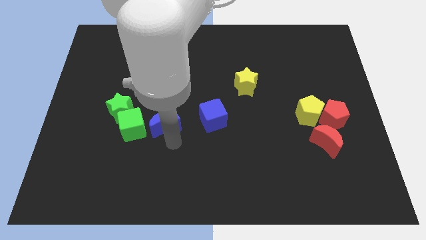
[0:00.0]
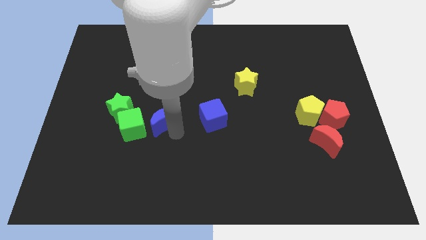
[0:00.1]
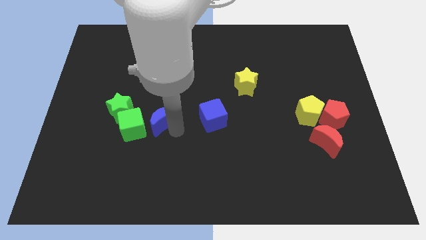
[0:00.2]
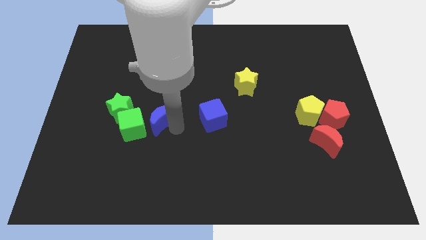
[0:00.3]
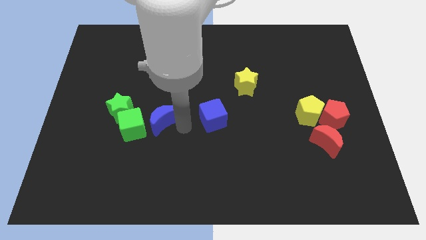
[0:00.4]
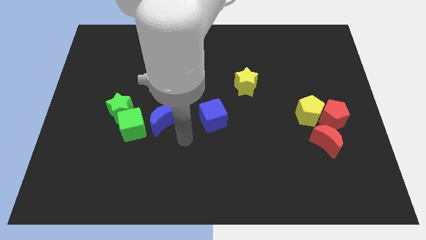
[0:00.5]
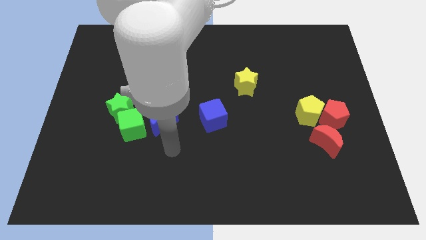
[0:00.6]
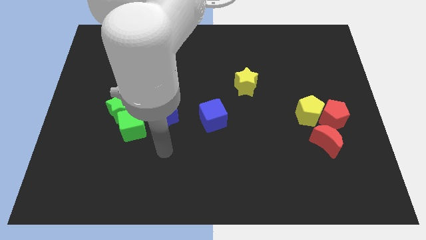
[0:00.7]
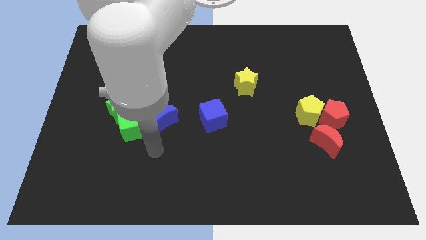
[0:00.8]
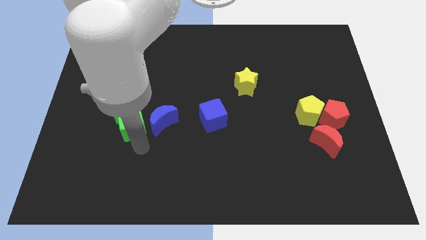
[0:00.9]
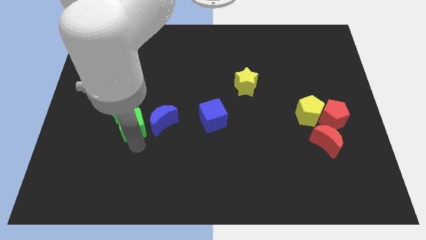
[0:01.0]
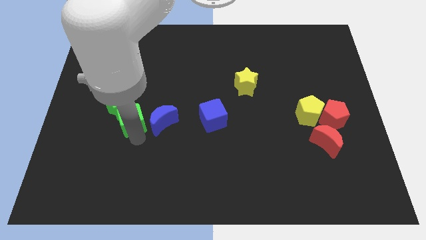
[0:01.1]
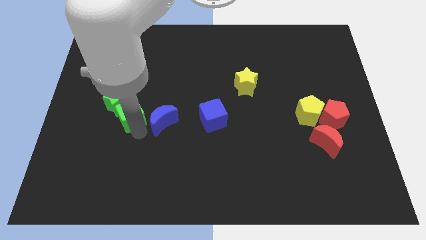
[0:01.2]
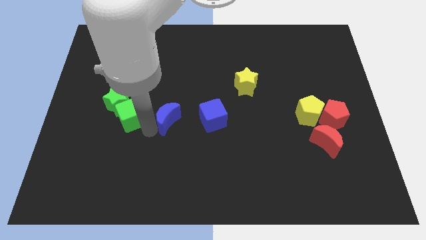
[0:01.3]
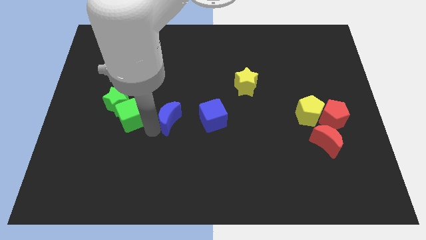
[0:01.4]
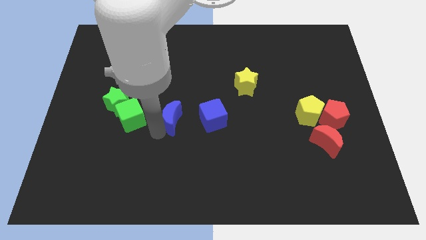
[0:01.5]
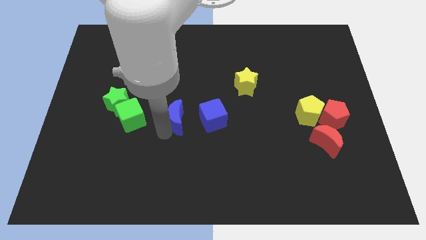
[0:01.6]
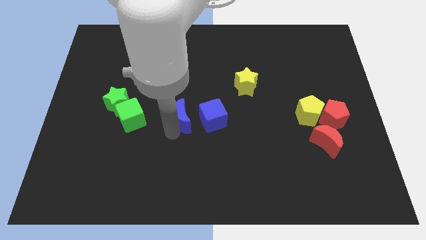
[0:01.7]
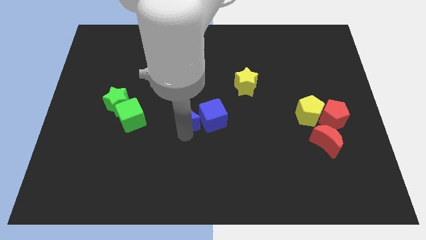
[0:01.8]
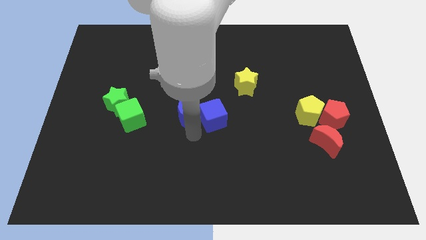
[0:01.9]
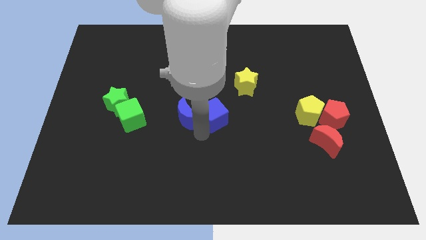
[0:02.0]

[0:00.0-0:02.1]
move the blue moon on the left side of the blue cube

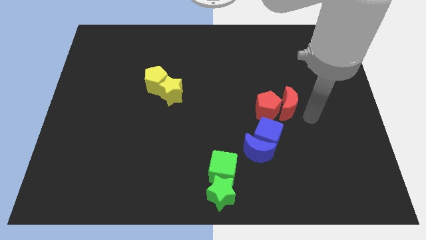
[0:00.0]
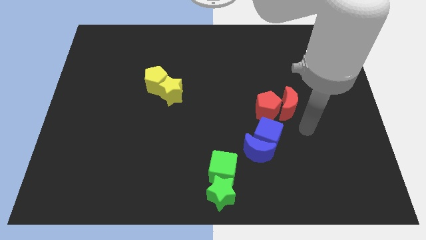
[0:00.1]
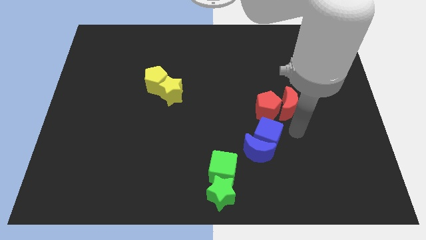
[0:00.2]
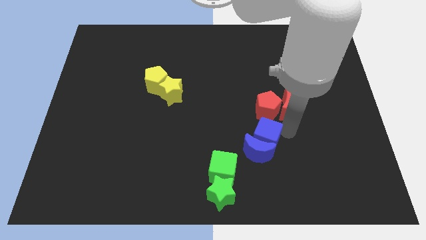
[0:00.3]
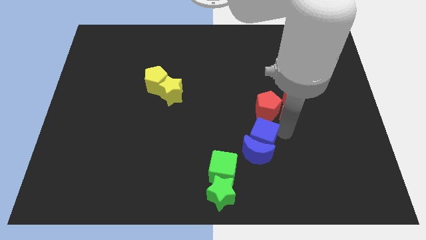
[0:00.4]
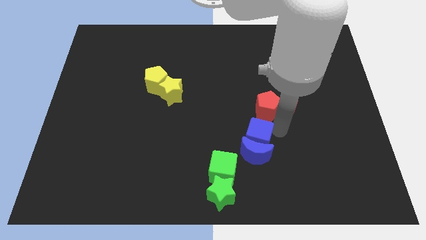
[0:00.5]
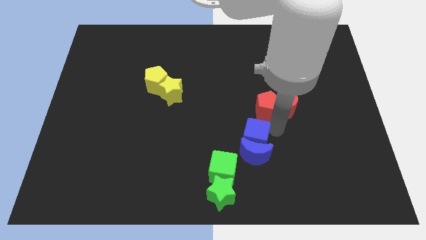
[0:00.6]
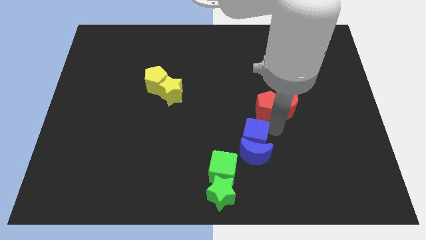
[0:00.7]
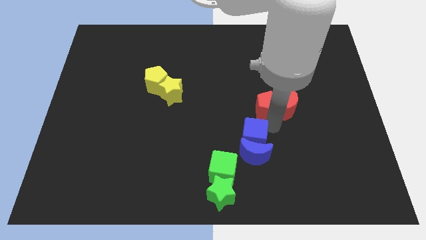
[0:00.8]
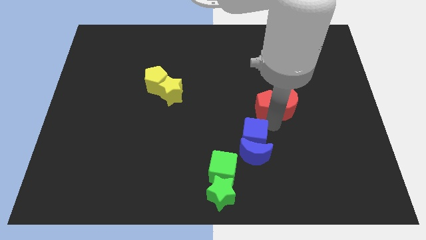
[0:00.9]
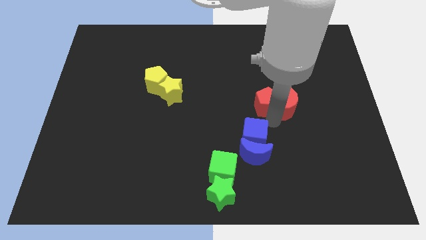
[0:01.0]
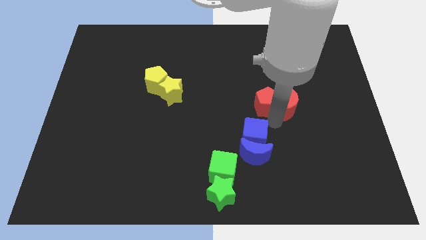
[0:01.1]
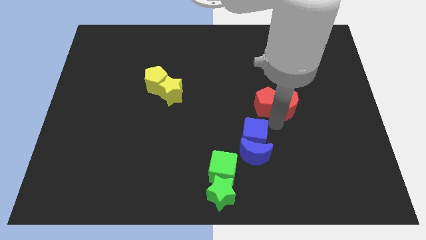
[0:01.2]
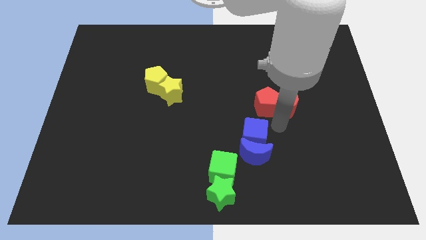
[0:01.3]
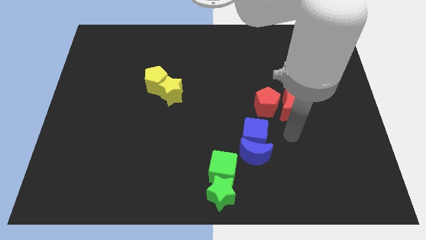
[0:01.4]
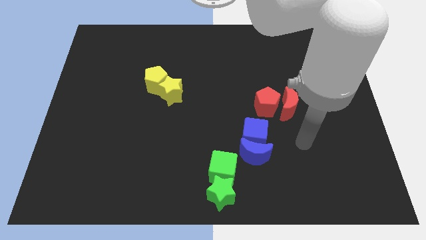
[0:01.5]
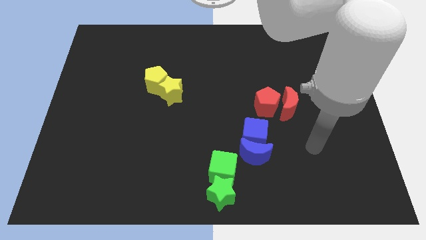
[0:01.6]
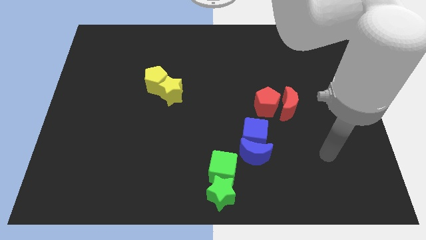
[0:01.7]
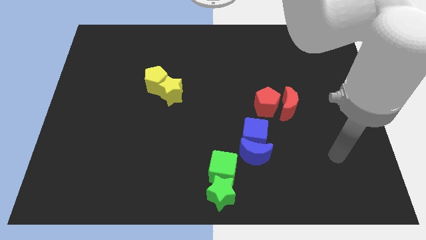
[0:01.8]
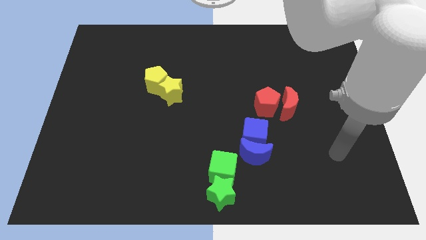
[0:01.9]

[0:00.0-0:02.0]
adjust the blue cube to the top side of the blue crescent

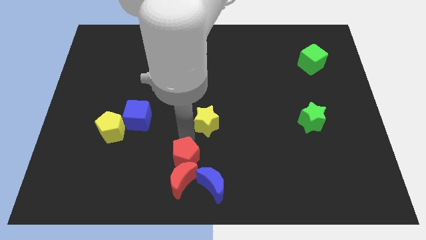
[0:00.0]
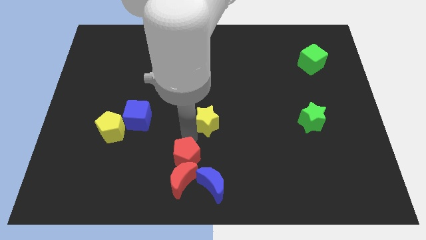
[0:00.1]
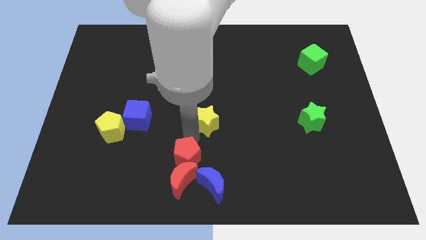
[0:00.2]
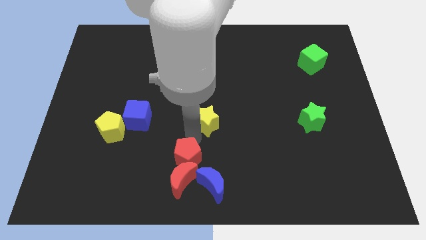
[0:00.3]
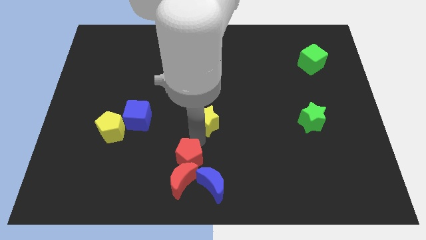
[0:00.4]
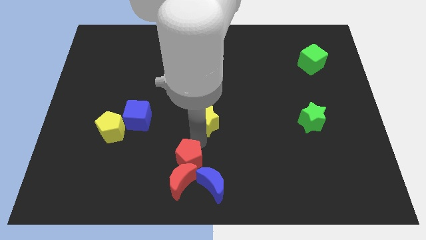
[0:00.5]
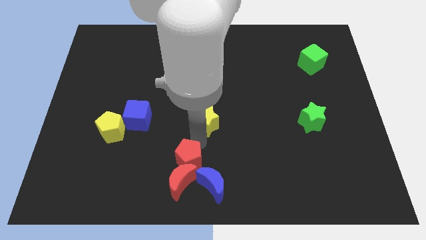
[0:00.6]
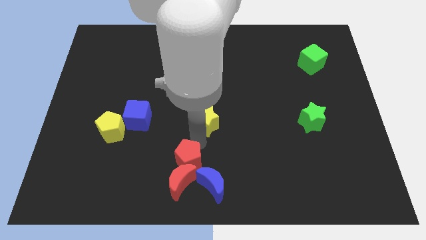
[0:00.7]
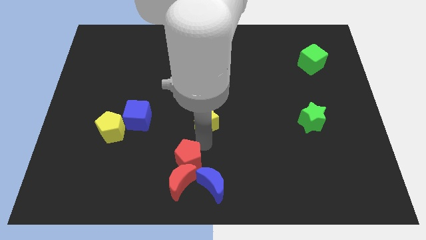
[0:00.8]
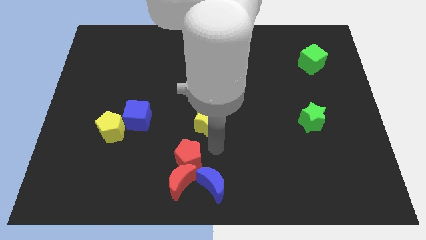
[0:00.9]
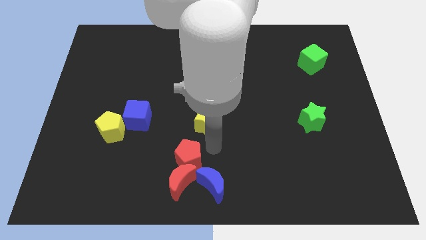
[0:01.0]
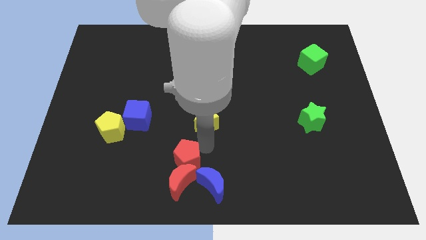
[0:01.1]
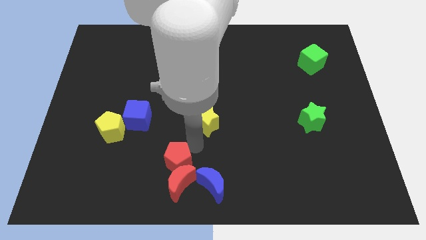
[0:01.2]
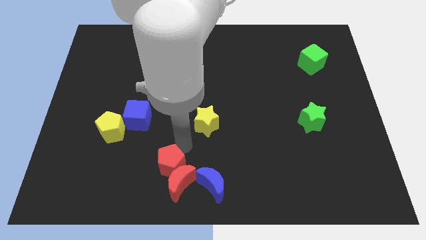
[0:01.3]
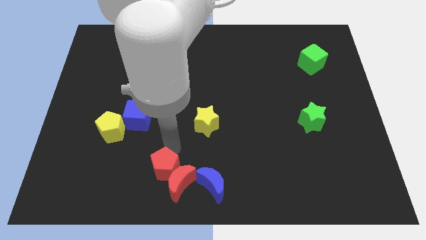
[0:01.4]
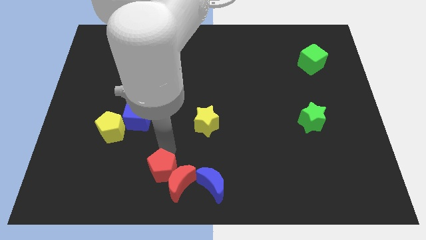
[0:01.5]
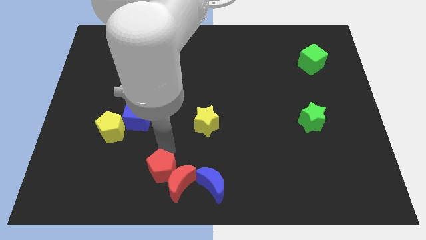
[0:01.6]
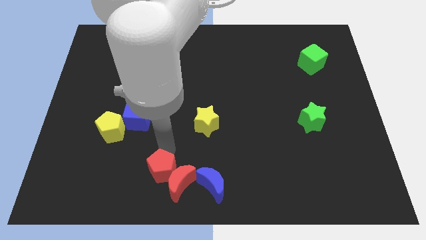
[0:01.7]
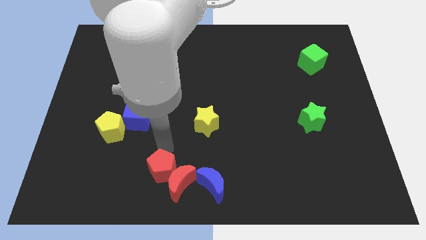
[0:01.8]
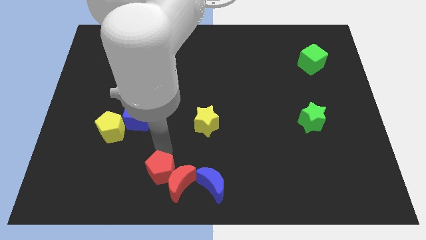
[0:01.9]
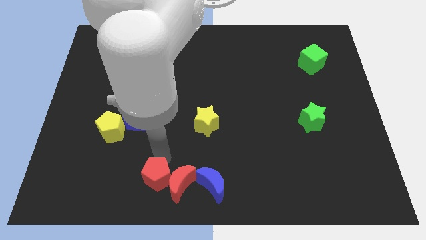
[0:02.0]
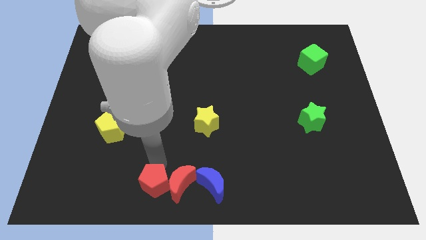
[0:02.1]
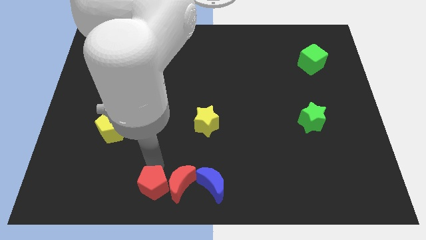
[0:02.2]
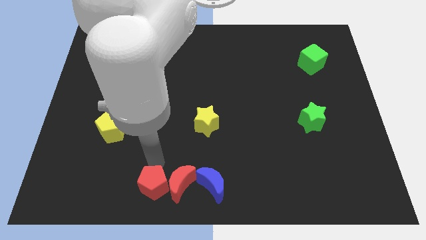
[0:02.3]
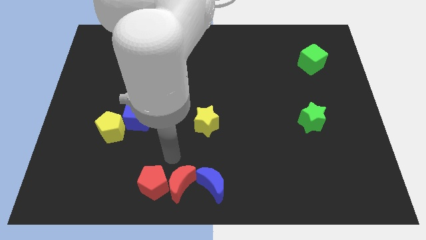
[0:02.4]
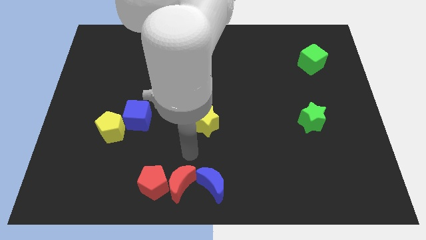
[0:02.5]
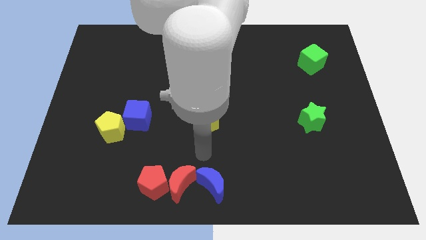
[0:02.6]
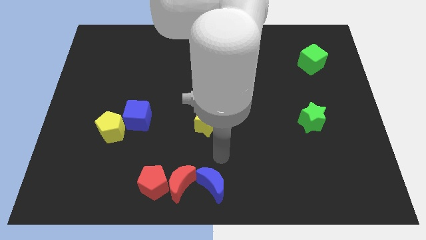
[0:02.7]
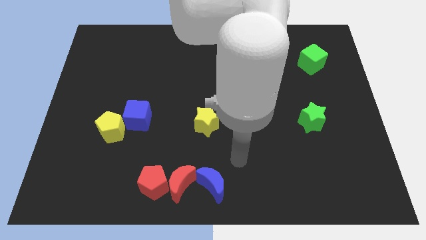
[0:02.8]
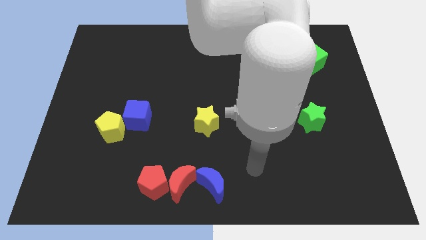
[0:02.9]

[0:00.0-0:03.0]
place the red pentagon left to the red crescent to form a horizontal line

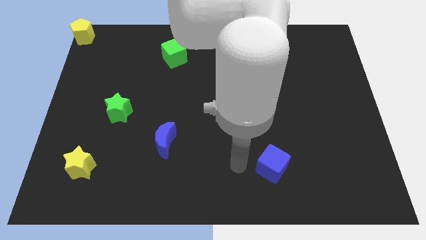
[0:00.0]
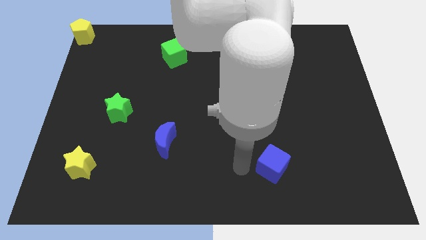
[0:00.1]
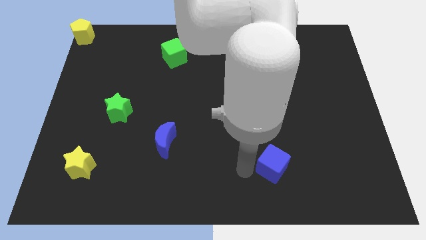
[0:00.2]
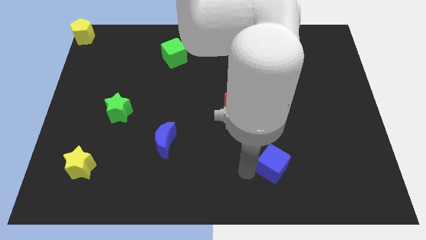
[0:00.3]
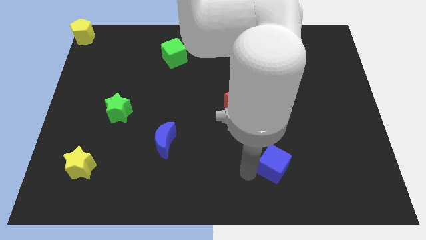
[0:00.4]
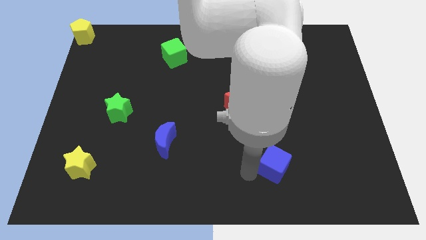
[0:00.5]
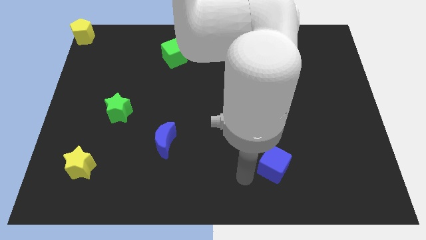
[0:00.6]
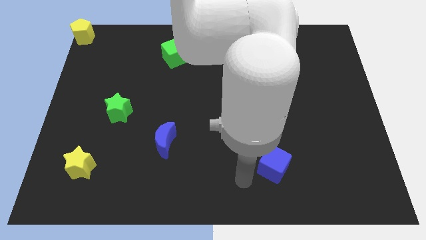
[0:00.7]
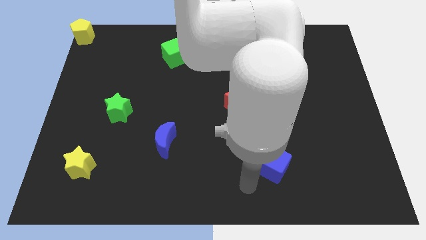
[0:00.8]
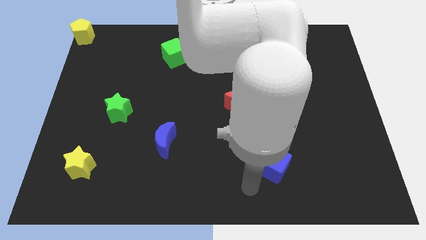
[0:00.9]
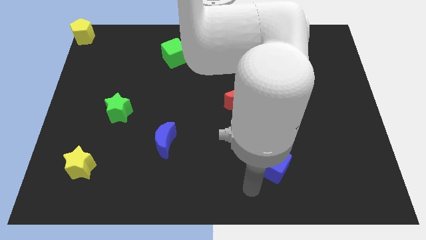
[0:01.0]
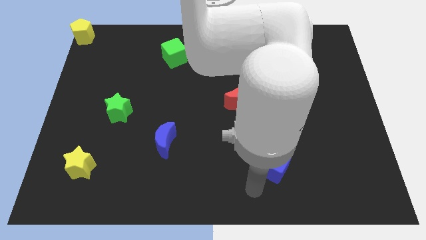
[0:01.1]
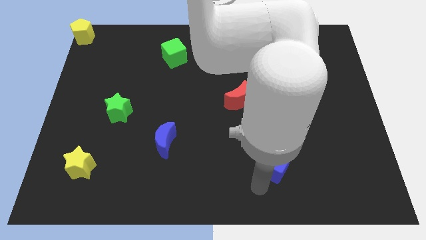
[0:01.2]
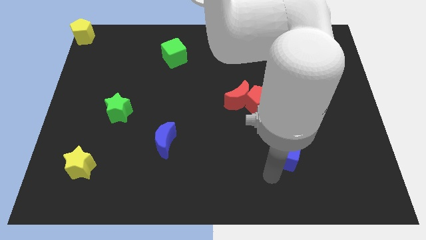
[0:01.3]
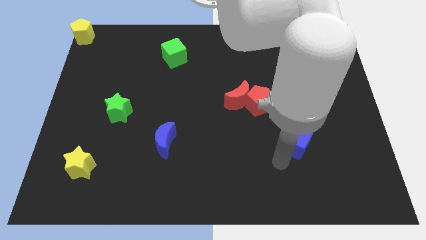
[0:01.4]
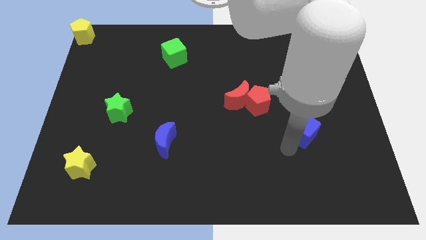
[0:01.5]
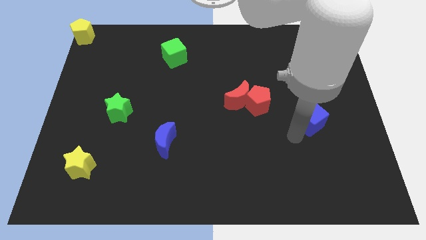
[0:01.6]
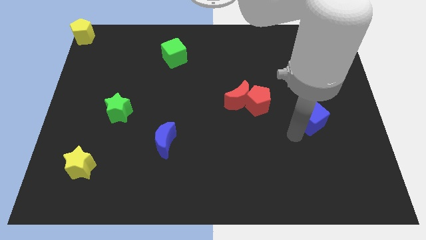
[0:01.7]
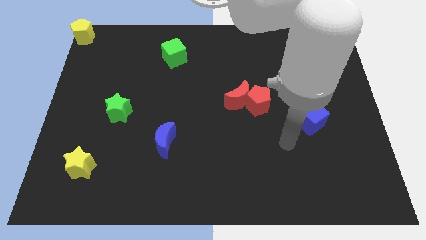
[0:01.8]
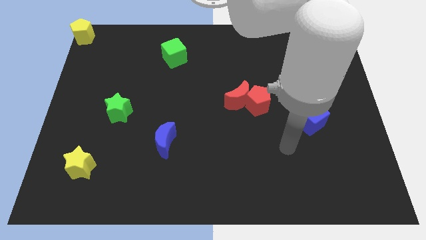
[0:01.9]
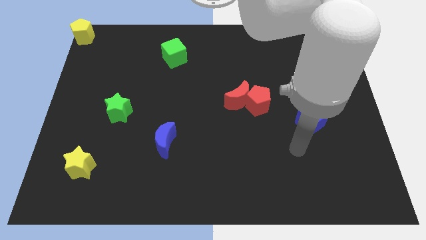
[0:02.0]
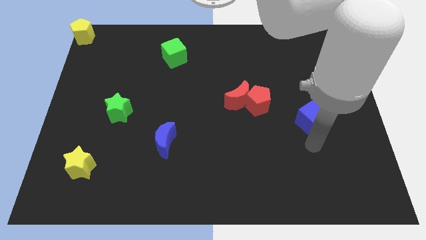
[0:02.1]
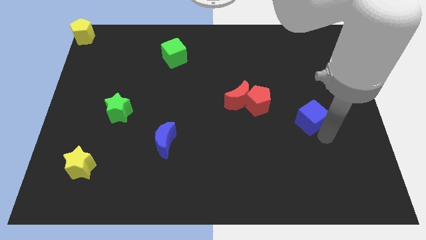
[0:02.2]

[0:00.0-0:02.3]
push the blue cube slightly to the top right of the board
